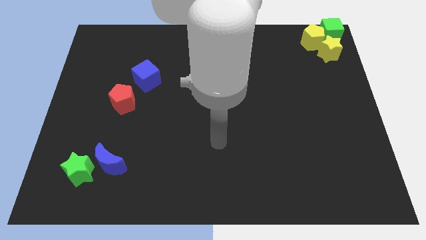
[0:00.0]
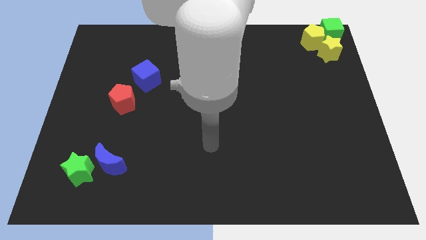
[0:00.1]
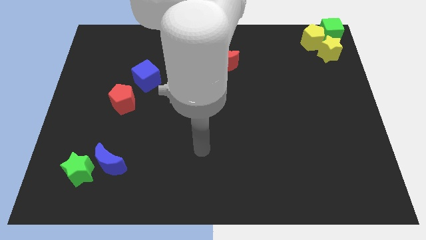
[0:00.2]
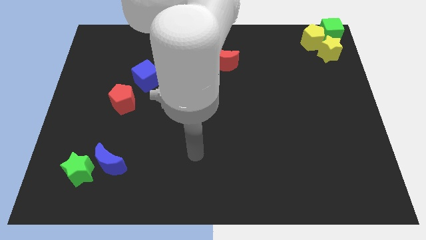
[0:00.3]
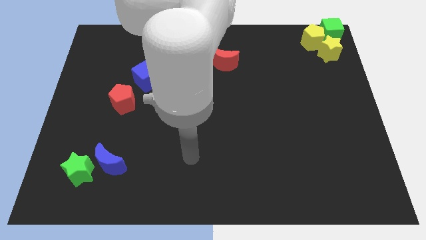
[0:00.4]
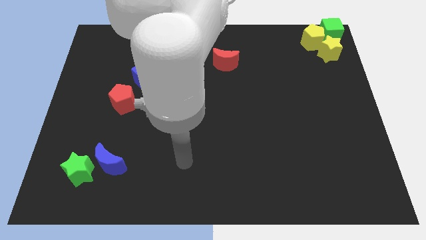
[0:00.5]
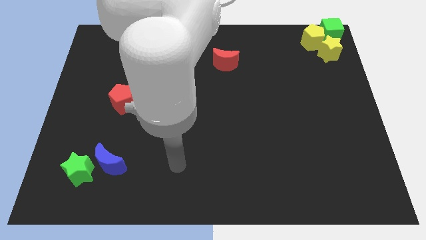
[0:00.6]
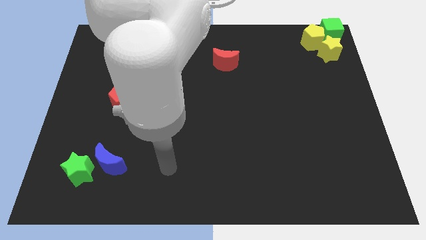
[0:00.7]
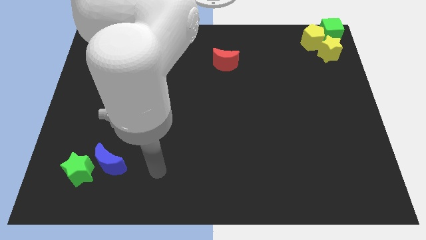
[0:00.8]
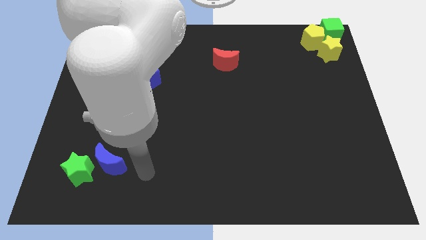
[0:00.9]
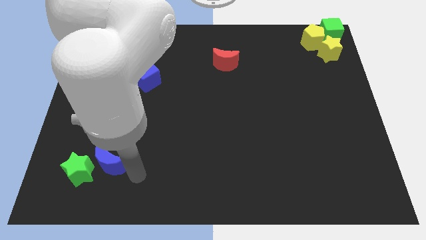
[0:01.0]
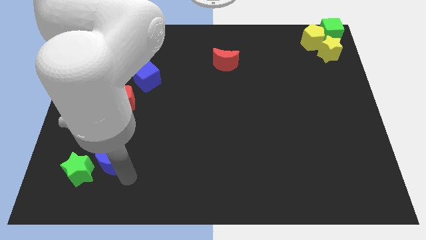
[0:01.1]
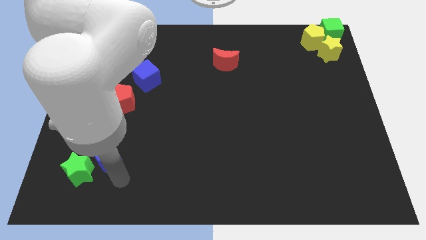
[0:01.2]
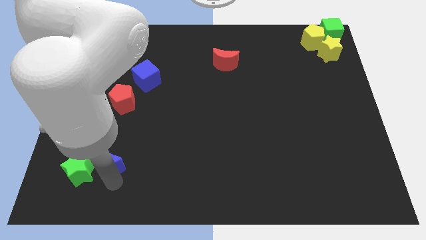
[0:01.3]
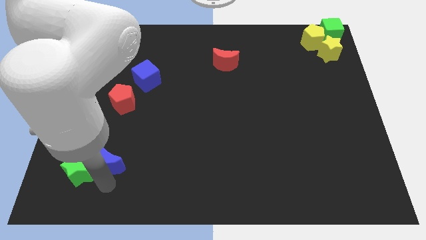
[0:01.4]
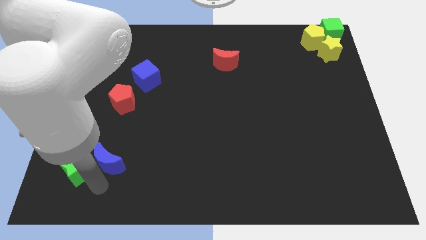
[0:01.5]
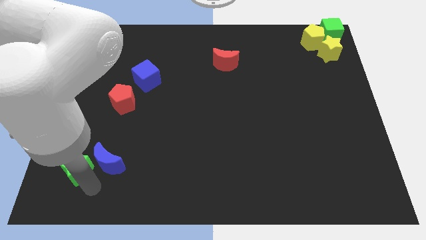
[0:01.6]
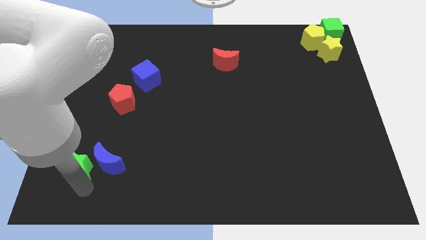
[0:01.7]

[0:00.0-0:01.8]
move your hand towards the green star

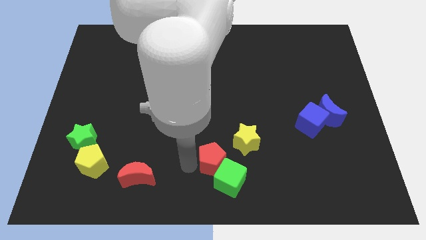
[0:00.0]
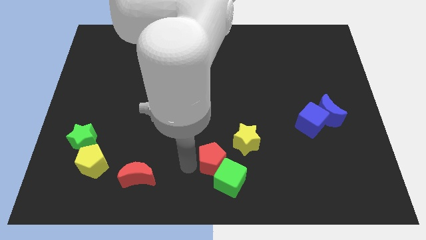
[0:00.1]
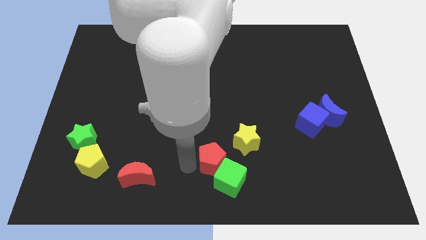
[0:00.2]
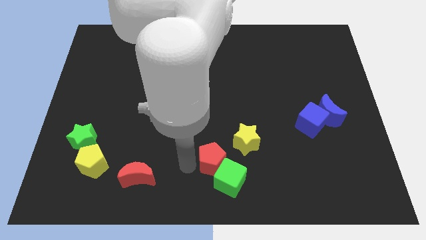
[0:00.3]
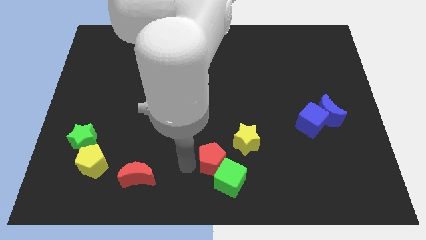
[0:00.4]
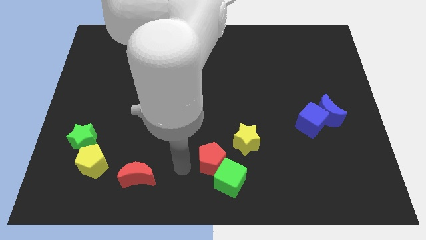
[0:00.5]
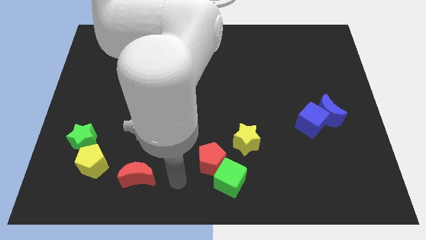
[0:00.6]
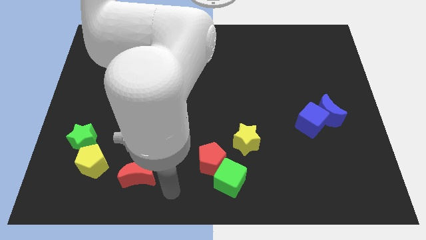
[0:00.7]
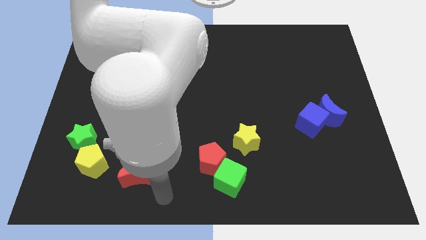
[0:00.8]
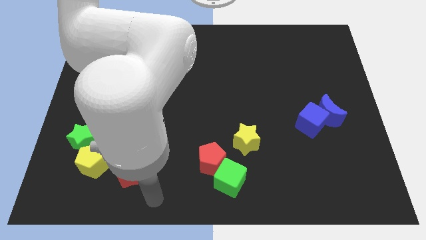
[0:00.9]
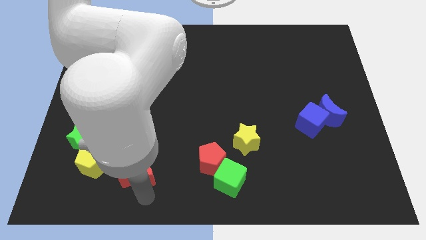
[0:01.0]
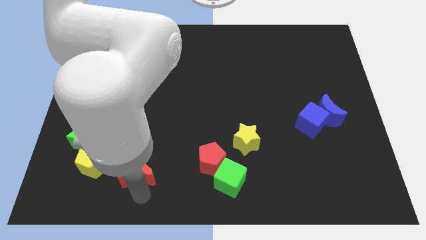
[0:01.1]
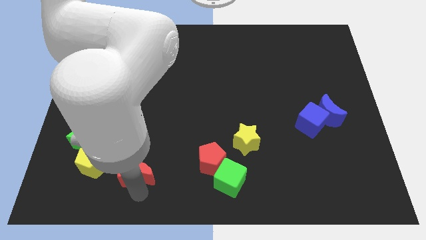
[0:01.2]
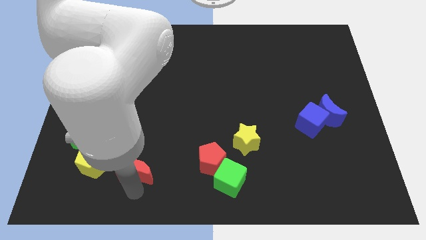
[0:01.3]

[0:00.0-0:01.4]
touch the bottom of red moon

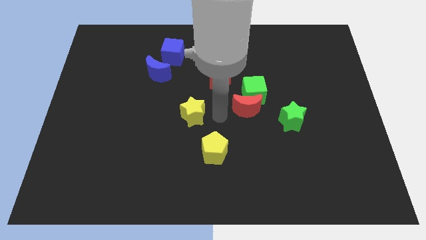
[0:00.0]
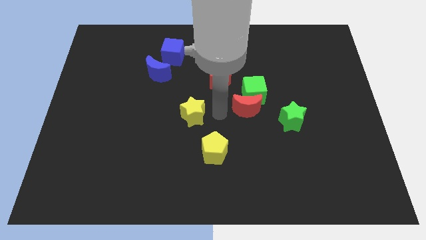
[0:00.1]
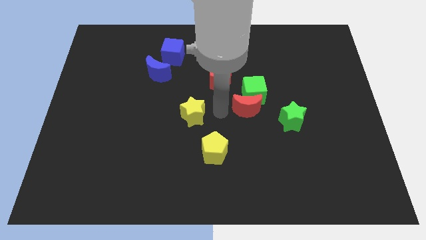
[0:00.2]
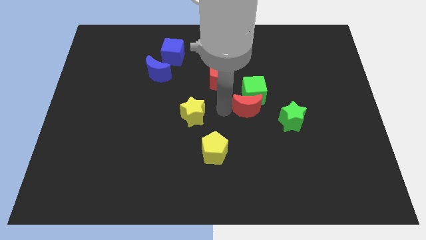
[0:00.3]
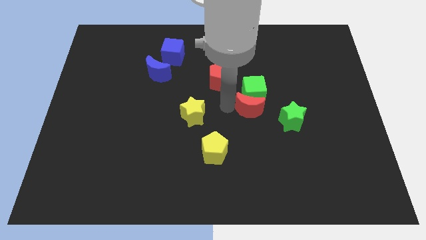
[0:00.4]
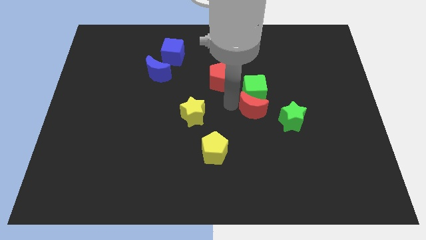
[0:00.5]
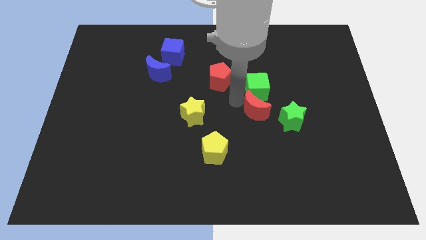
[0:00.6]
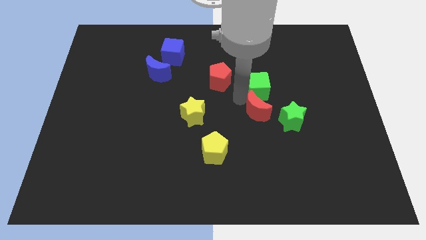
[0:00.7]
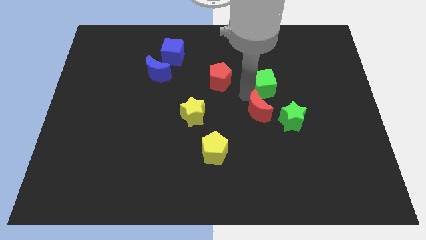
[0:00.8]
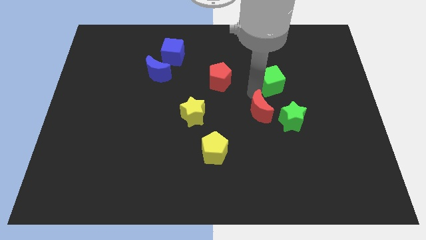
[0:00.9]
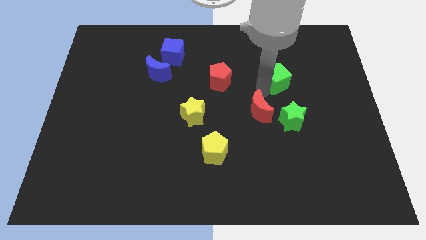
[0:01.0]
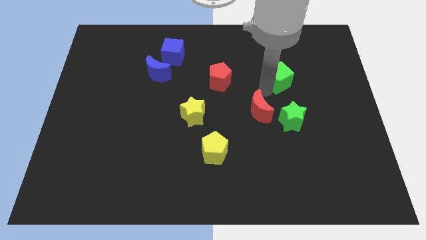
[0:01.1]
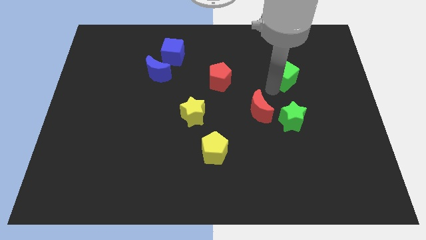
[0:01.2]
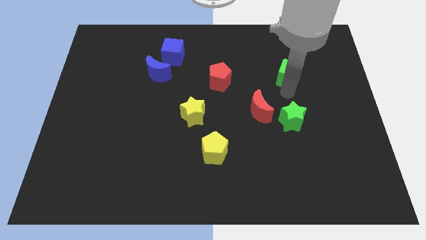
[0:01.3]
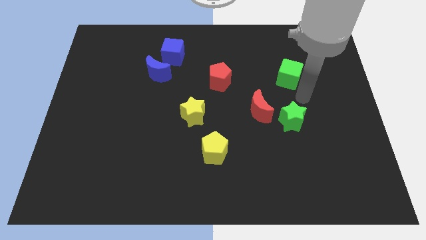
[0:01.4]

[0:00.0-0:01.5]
separate the green cube from the red crescent

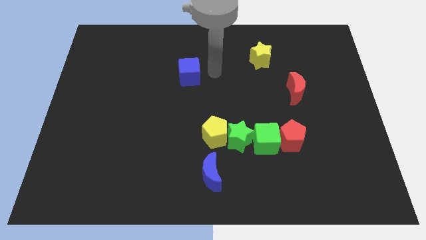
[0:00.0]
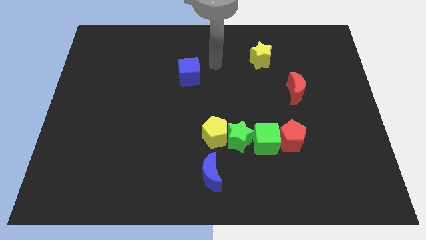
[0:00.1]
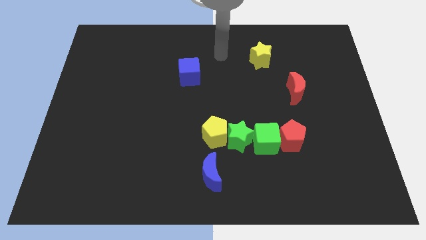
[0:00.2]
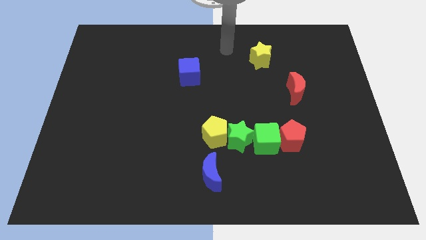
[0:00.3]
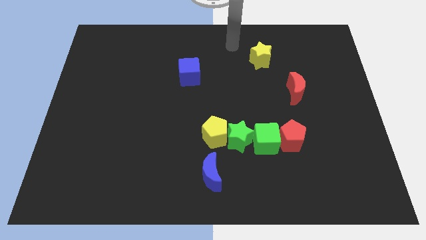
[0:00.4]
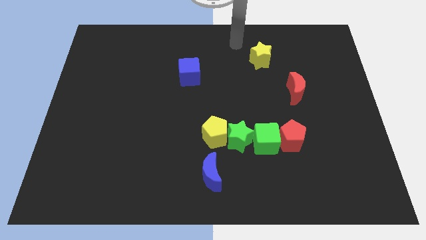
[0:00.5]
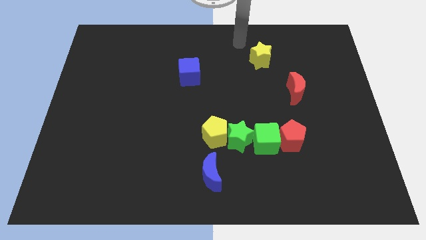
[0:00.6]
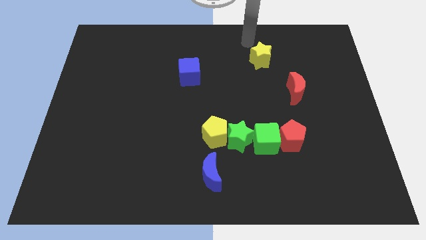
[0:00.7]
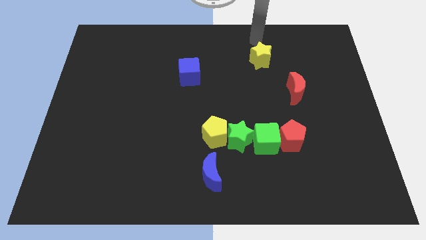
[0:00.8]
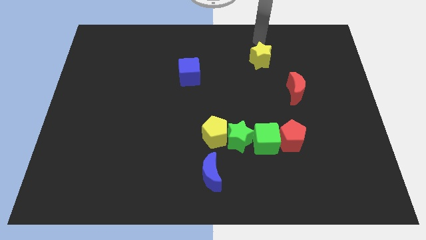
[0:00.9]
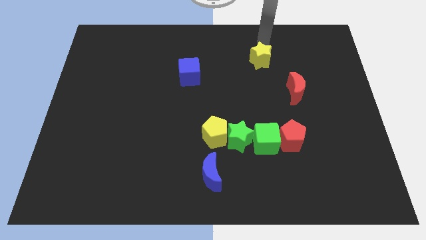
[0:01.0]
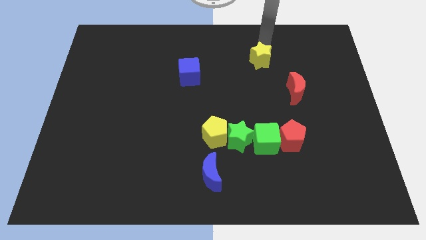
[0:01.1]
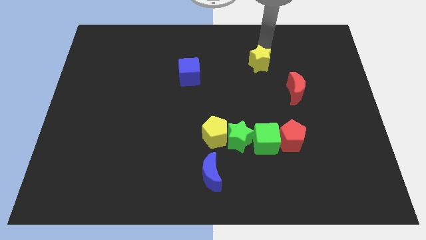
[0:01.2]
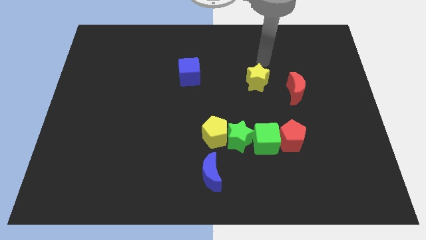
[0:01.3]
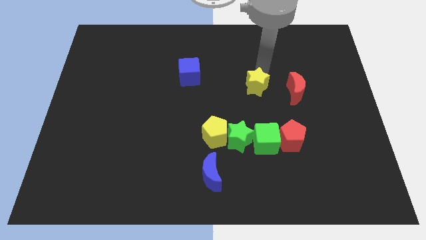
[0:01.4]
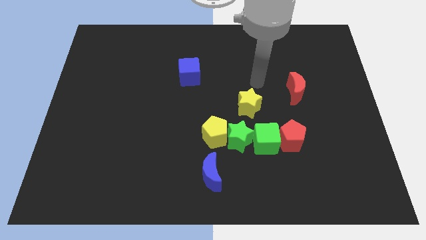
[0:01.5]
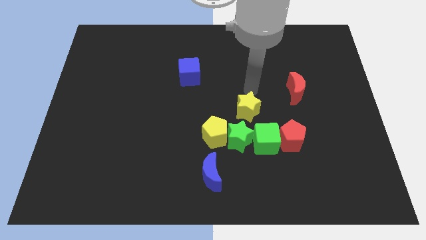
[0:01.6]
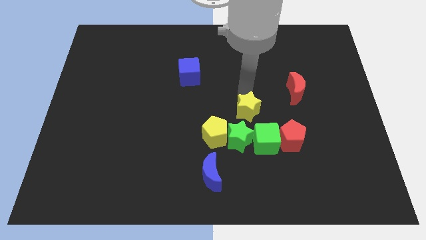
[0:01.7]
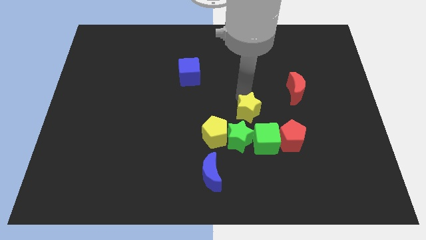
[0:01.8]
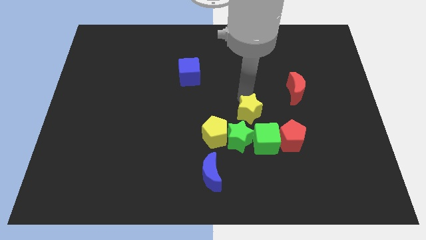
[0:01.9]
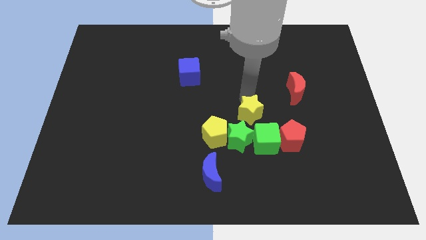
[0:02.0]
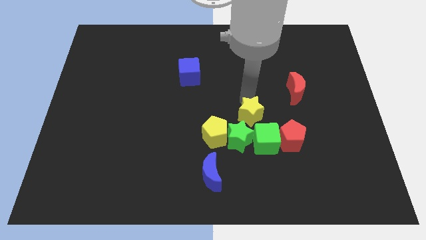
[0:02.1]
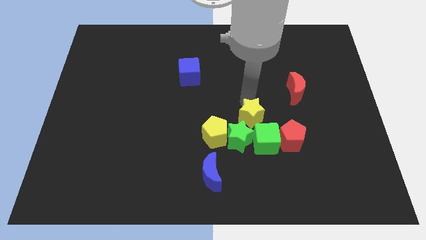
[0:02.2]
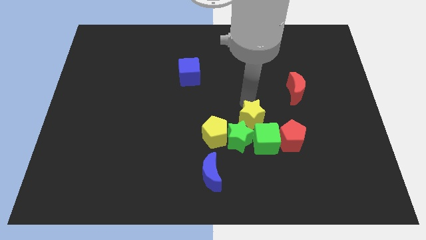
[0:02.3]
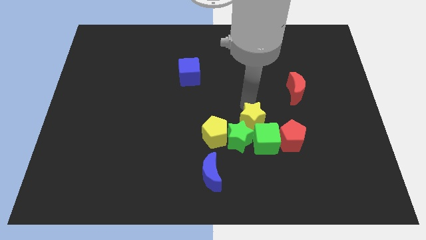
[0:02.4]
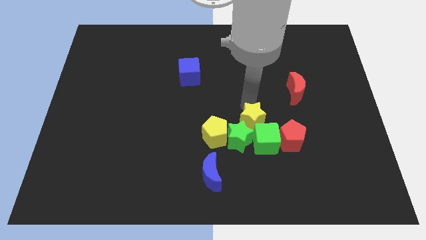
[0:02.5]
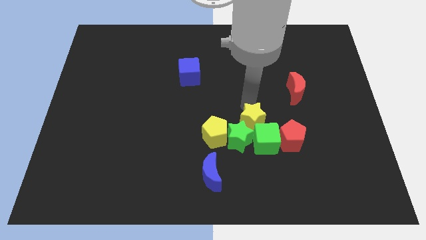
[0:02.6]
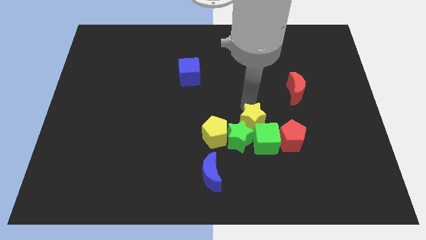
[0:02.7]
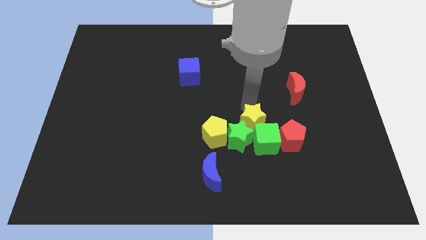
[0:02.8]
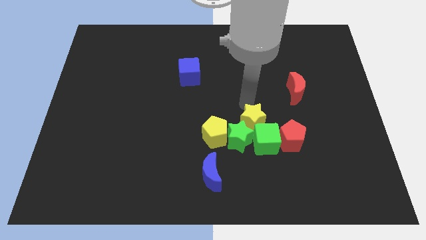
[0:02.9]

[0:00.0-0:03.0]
move the yellow star to the top of the green cube

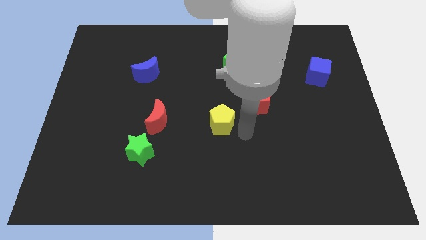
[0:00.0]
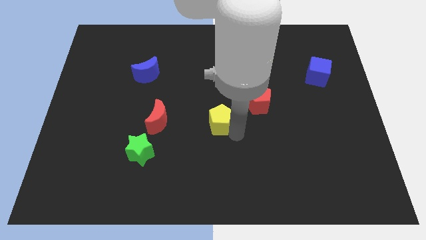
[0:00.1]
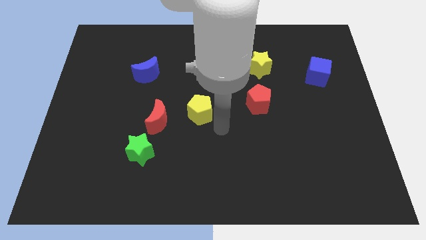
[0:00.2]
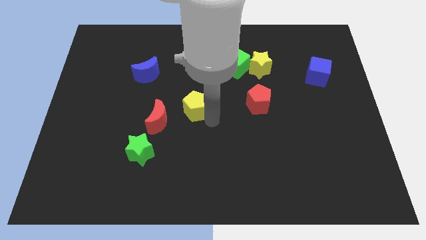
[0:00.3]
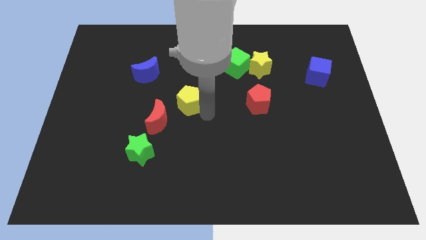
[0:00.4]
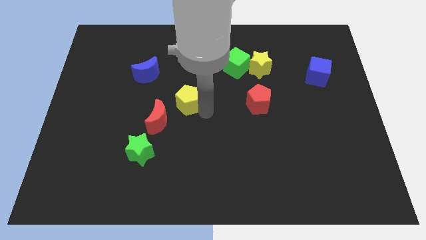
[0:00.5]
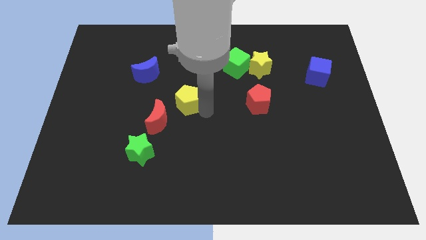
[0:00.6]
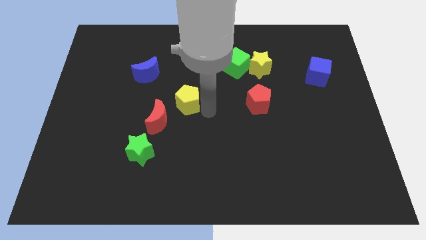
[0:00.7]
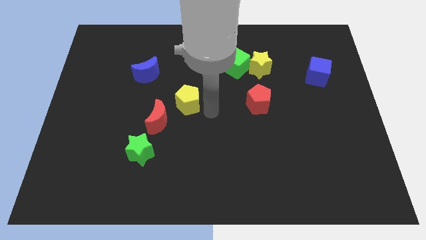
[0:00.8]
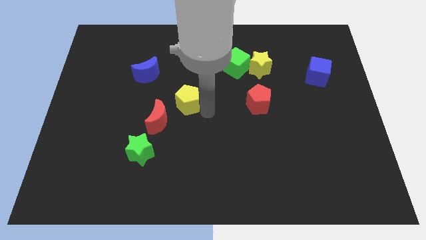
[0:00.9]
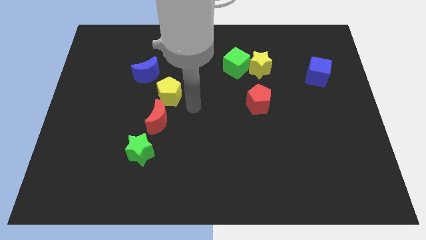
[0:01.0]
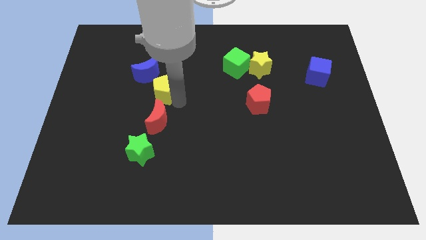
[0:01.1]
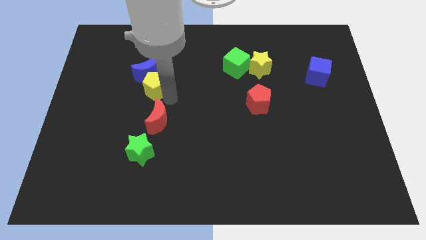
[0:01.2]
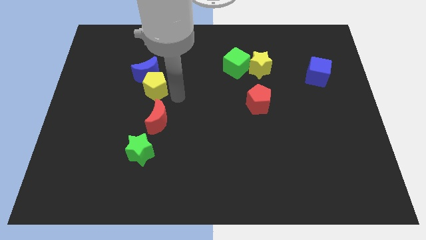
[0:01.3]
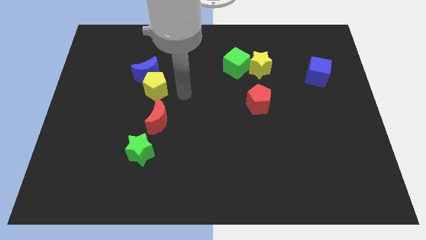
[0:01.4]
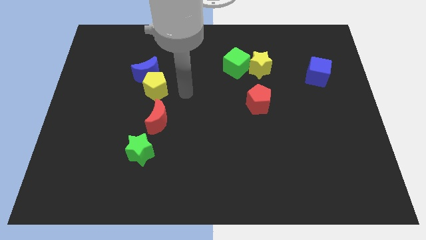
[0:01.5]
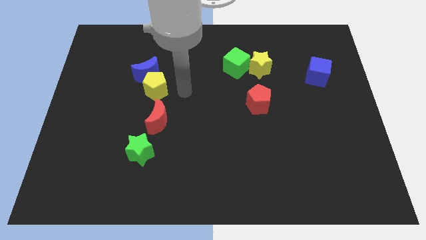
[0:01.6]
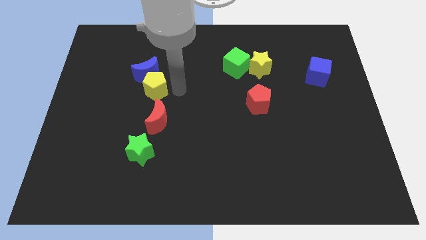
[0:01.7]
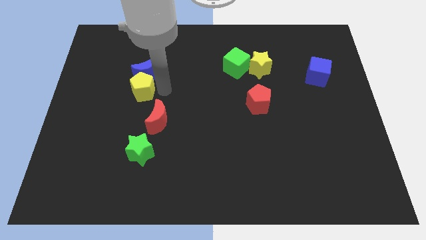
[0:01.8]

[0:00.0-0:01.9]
slide the yellow pentagon vertically below the blue moon
